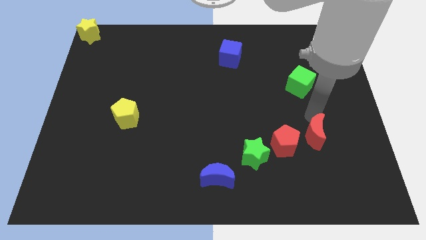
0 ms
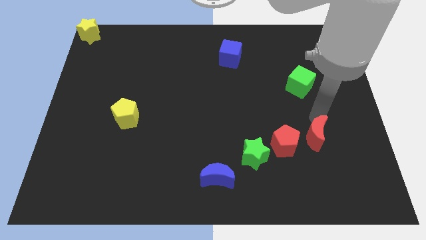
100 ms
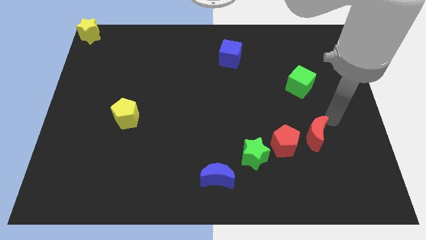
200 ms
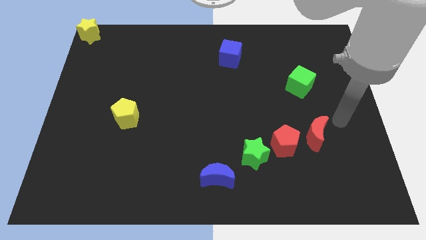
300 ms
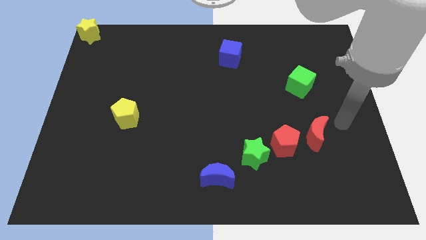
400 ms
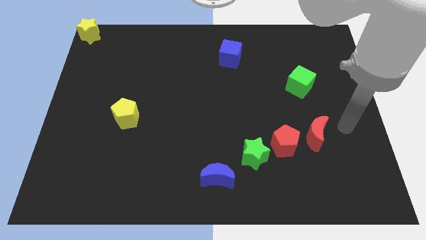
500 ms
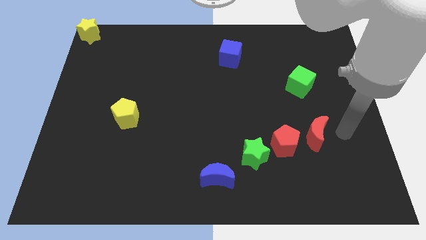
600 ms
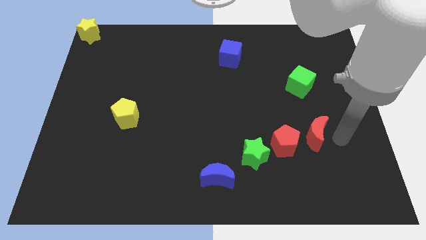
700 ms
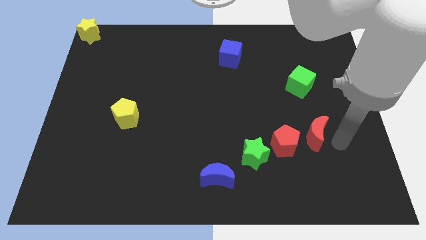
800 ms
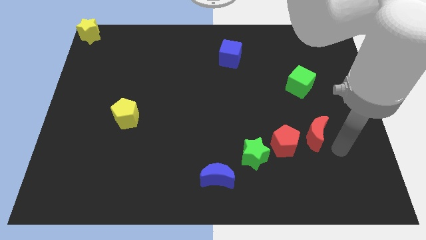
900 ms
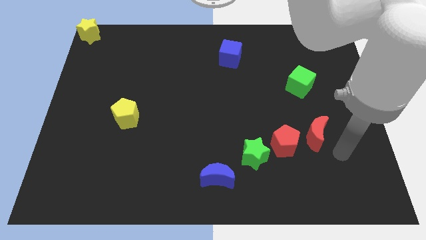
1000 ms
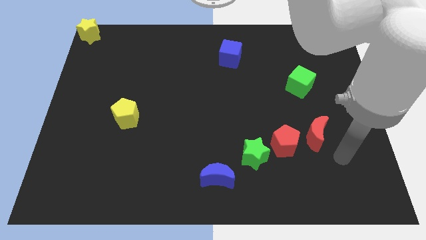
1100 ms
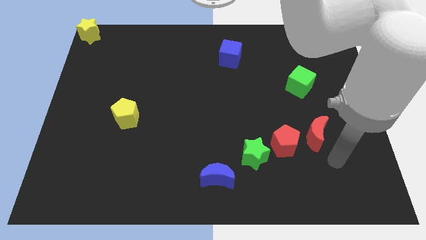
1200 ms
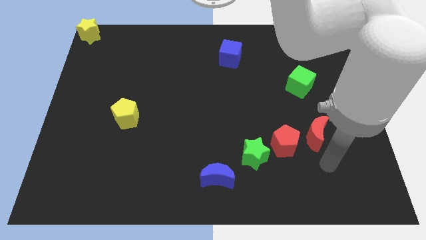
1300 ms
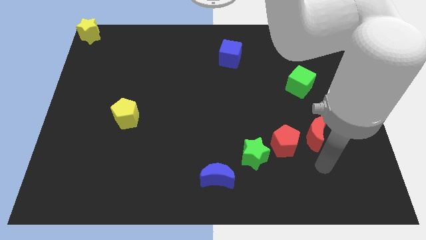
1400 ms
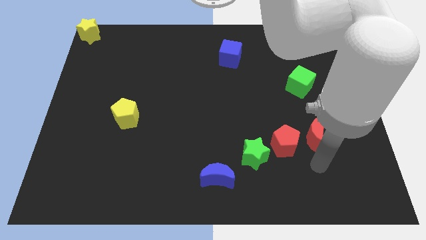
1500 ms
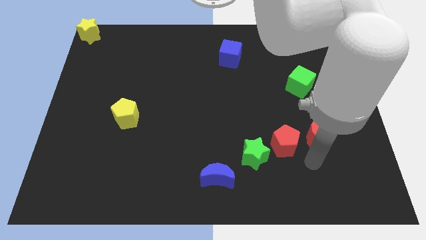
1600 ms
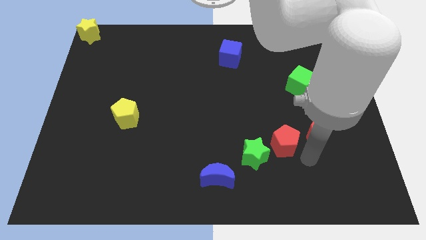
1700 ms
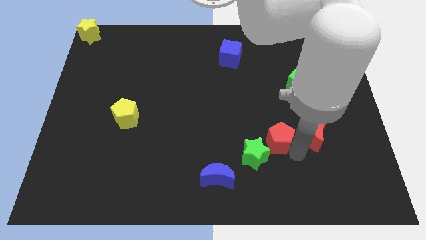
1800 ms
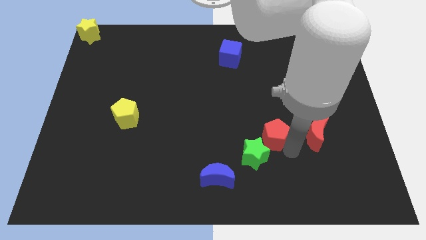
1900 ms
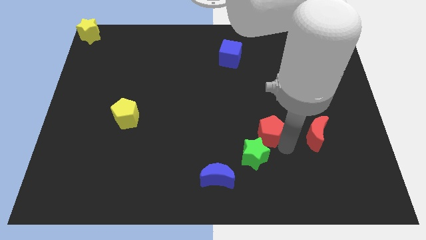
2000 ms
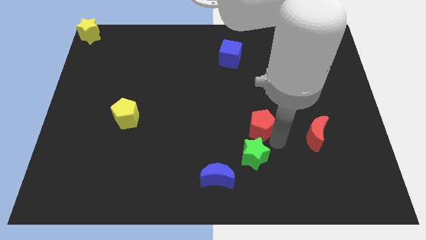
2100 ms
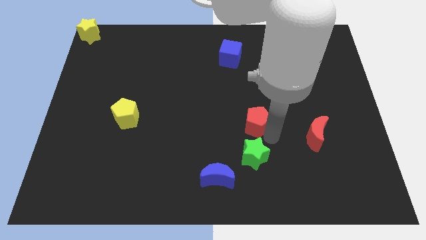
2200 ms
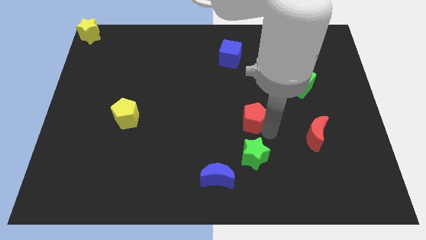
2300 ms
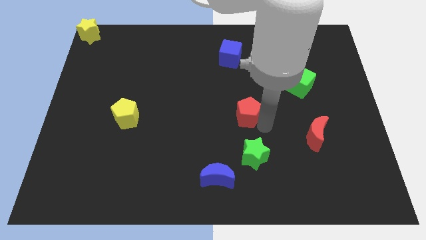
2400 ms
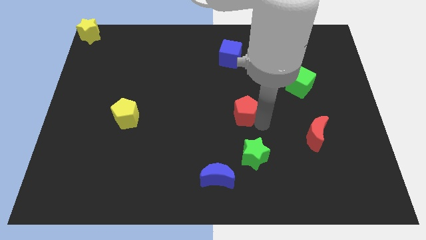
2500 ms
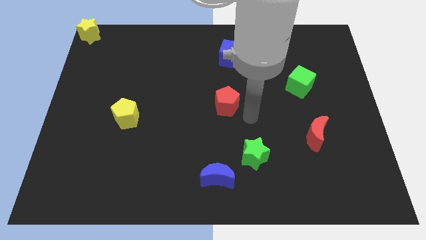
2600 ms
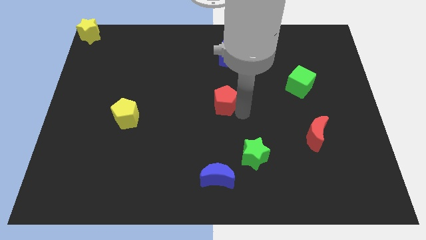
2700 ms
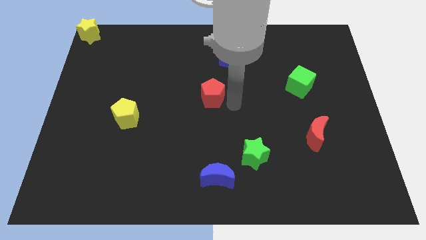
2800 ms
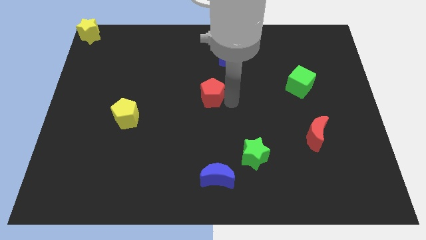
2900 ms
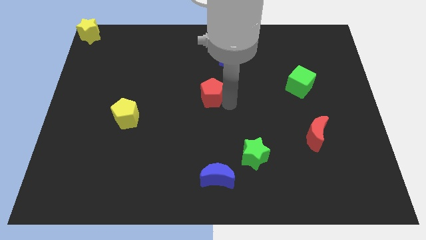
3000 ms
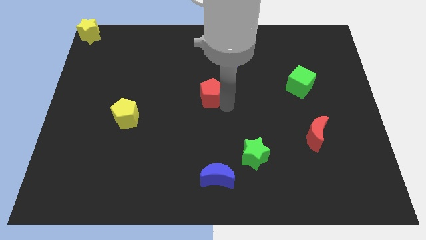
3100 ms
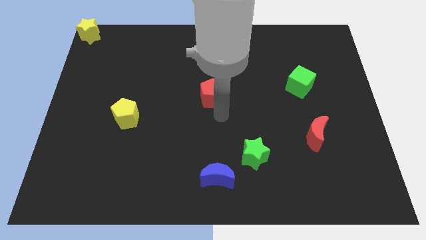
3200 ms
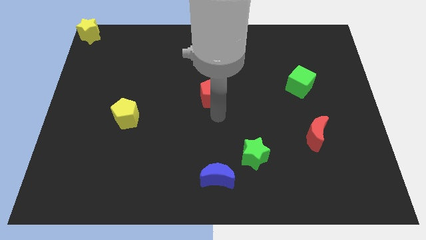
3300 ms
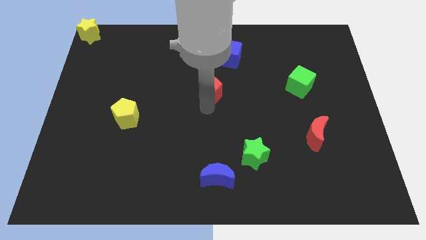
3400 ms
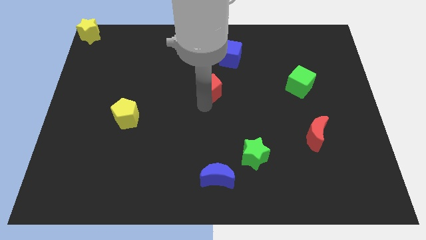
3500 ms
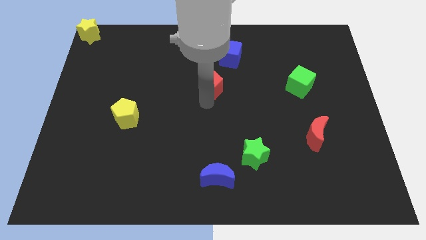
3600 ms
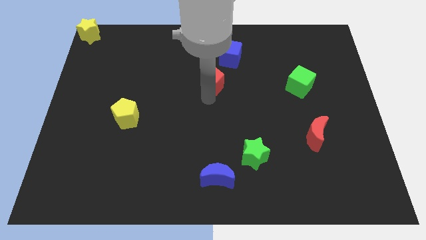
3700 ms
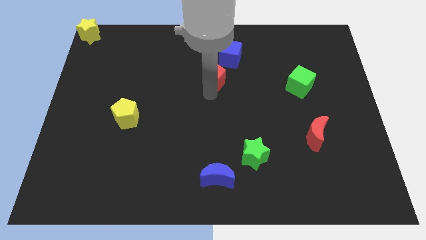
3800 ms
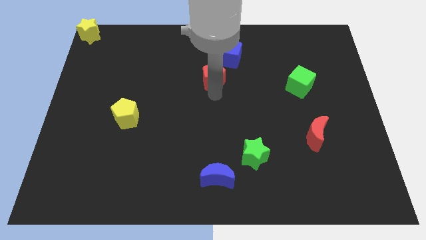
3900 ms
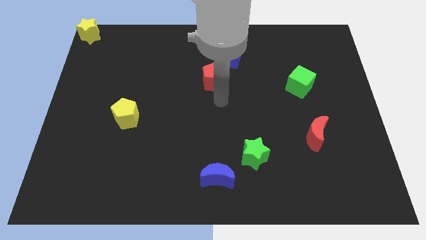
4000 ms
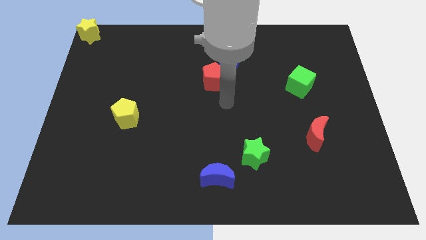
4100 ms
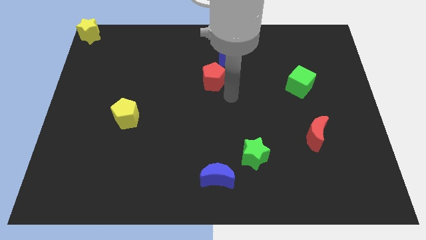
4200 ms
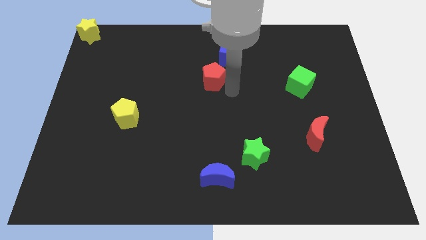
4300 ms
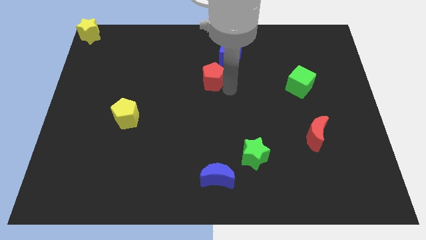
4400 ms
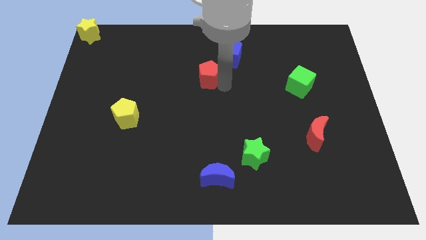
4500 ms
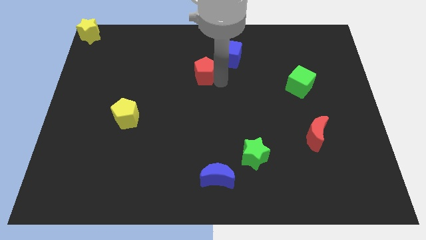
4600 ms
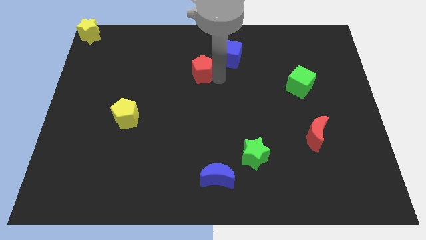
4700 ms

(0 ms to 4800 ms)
drag the red pentagon slightly upwards

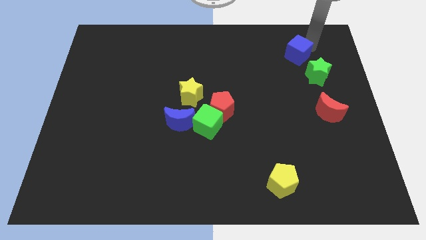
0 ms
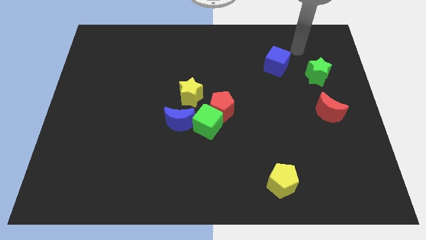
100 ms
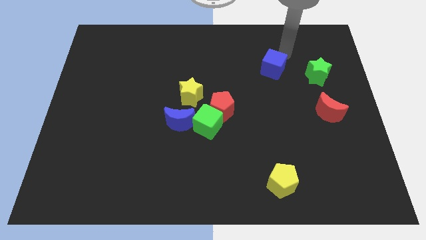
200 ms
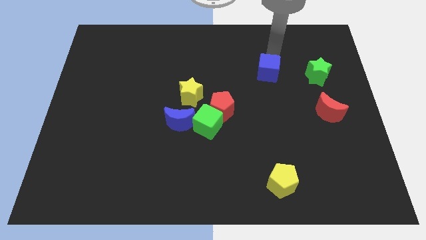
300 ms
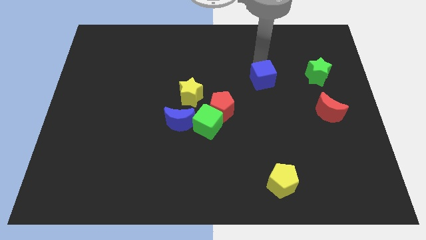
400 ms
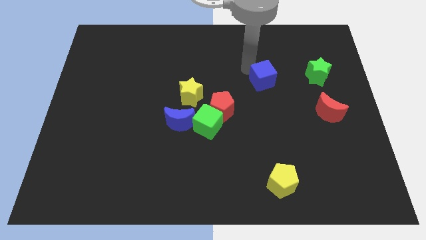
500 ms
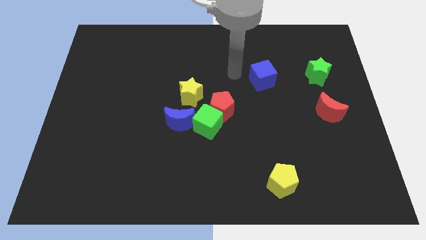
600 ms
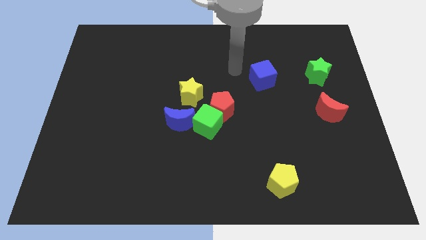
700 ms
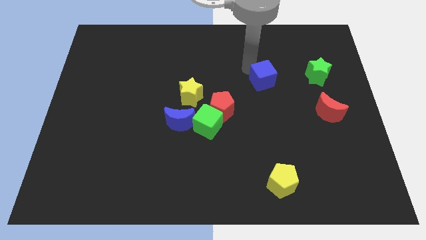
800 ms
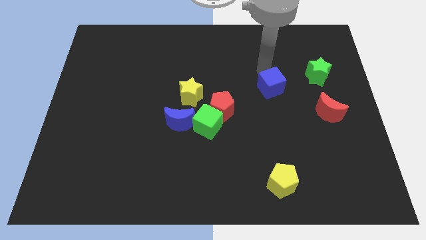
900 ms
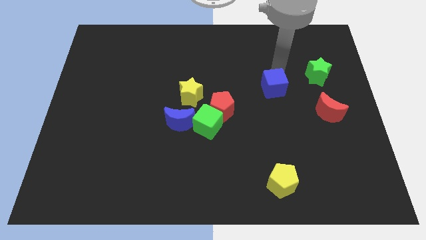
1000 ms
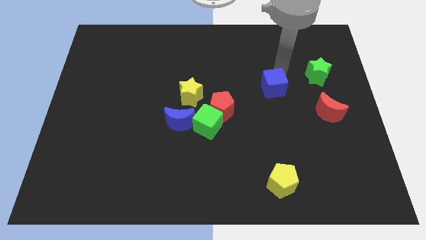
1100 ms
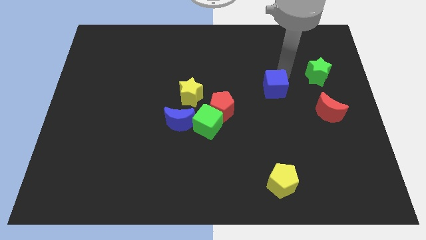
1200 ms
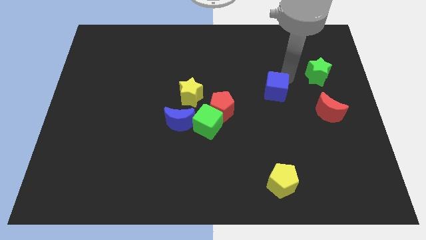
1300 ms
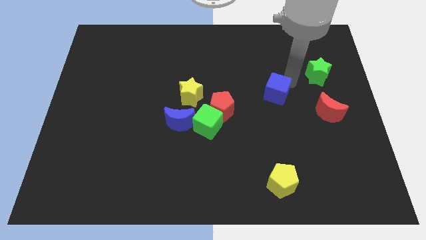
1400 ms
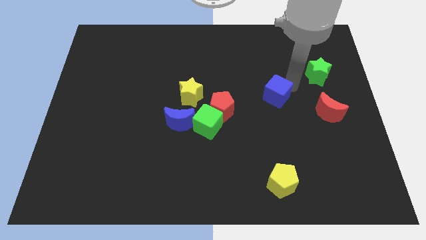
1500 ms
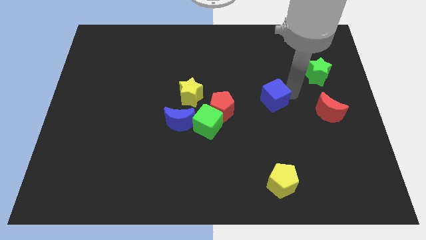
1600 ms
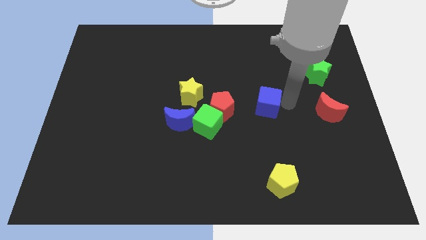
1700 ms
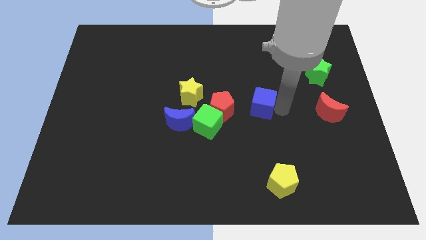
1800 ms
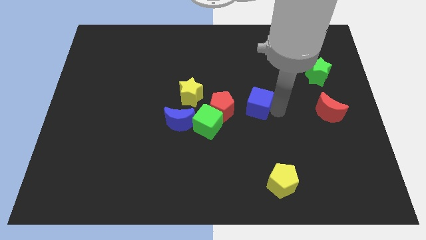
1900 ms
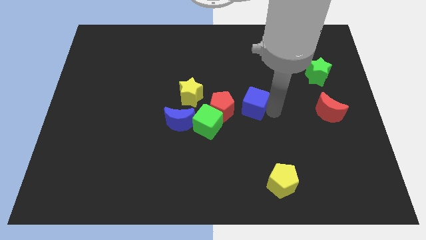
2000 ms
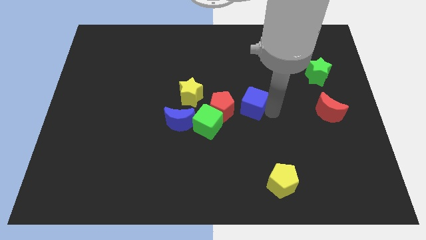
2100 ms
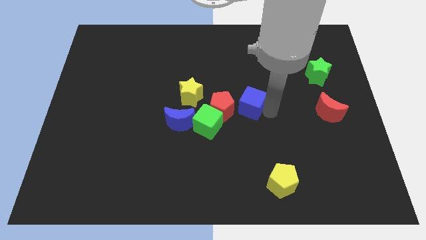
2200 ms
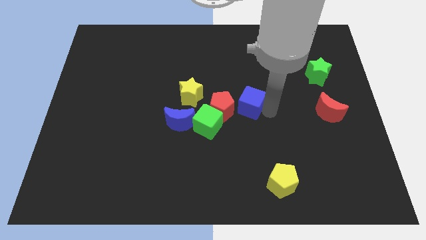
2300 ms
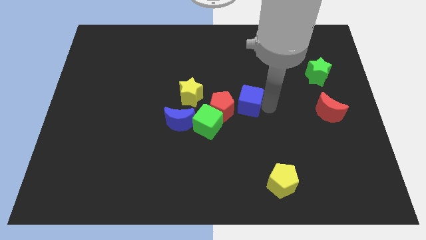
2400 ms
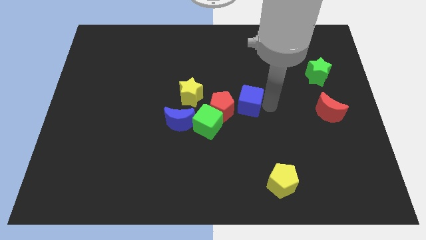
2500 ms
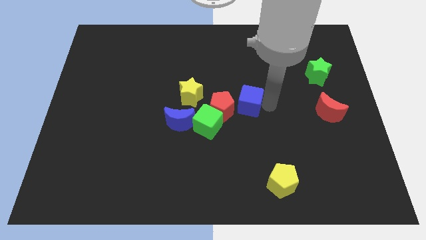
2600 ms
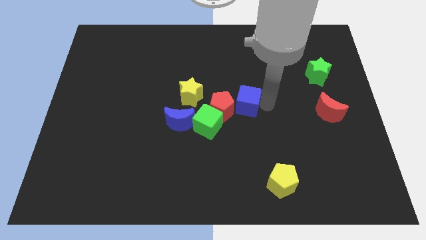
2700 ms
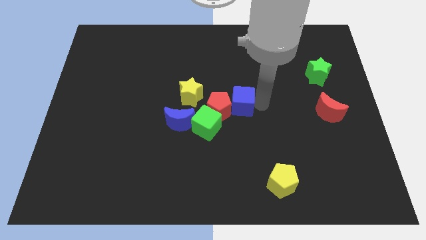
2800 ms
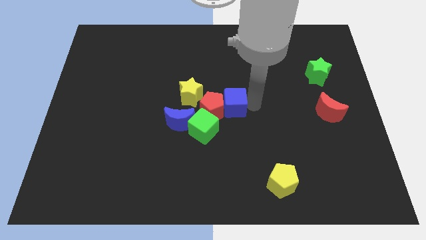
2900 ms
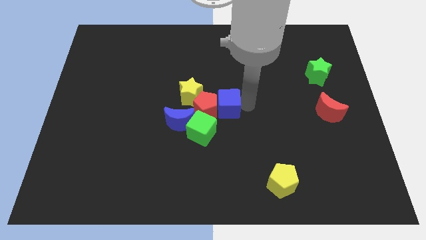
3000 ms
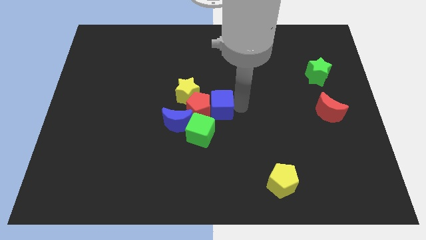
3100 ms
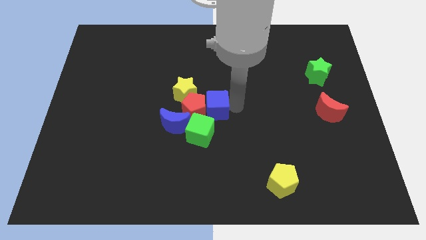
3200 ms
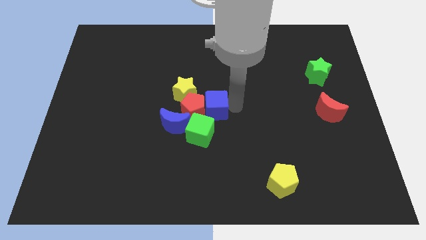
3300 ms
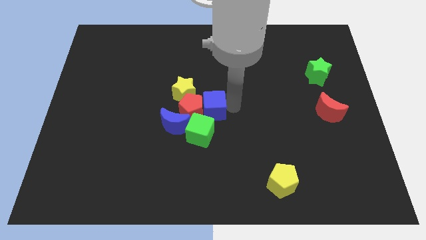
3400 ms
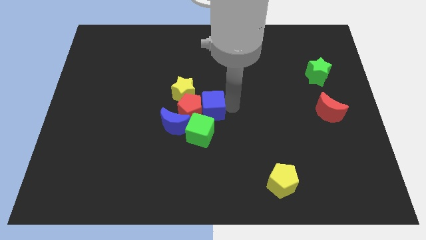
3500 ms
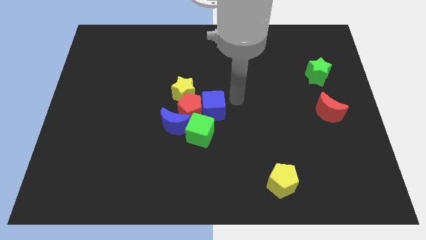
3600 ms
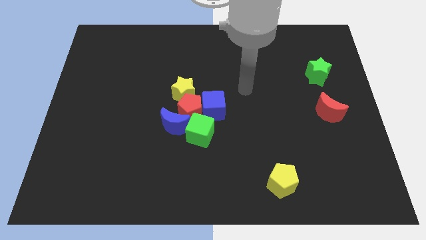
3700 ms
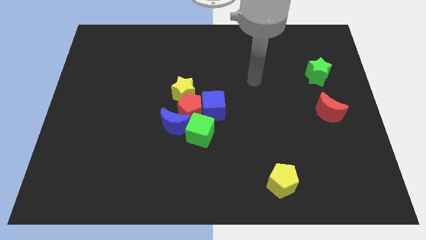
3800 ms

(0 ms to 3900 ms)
push the blue cube into the red pentagon

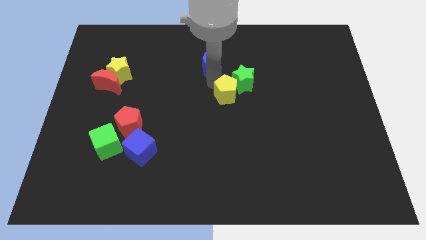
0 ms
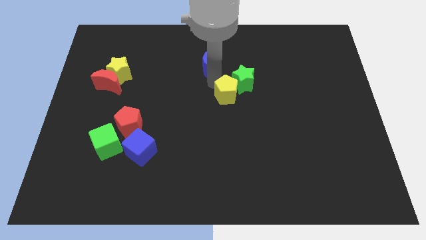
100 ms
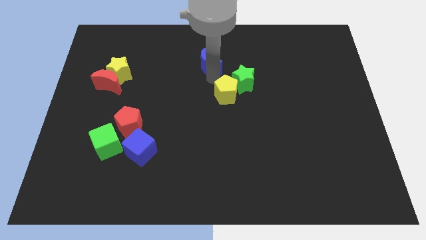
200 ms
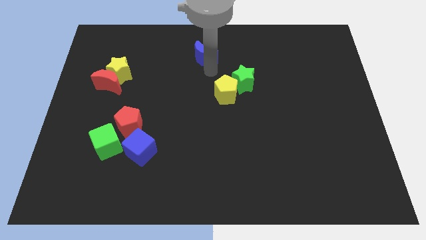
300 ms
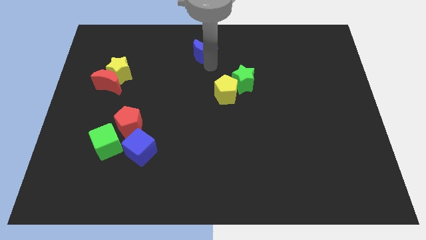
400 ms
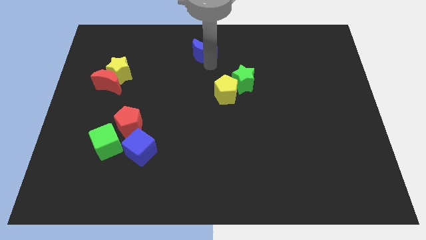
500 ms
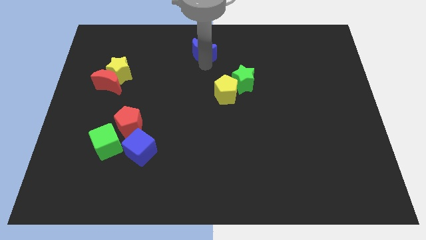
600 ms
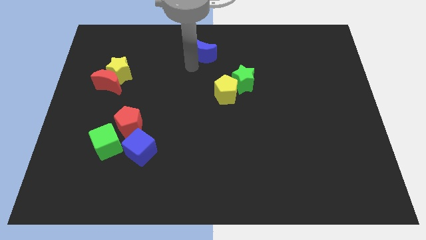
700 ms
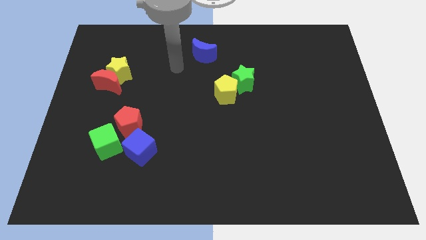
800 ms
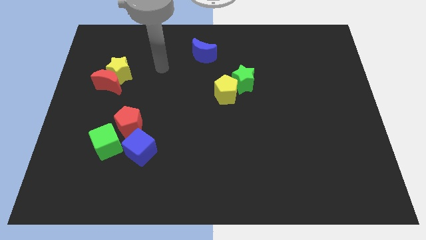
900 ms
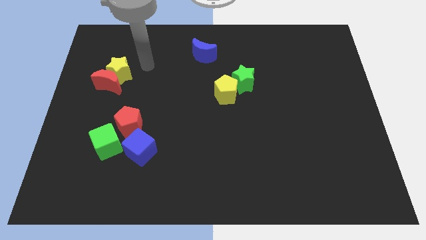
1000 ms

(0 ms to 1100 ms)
separate the blue moon from the yellow pentagon
